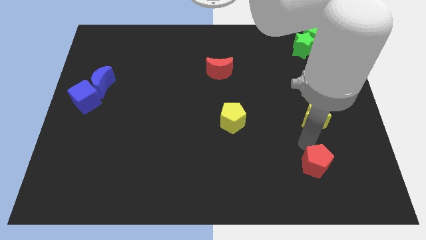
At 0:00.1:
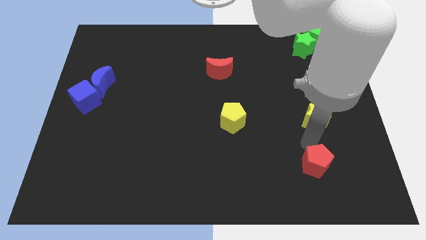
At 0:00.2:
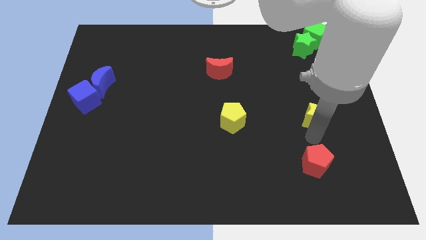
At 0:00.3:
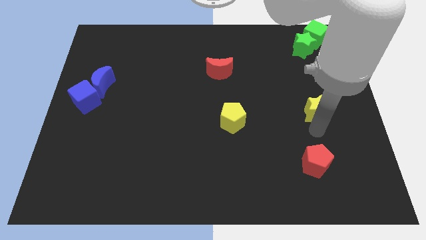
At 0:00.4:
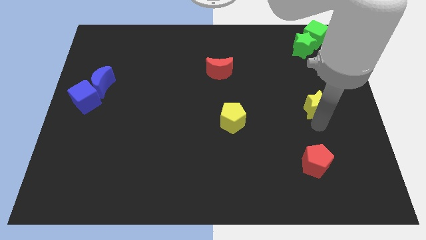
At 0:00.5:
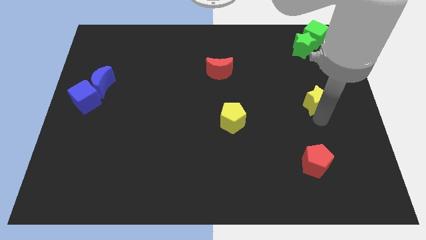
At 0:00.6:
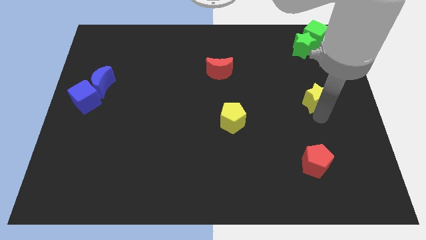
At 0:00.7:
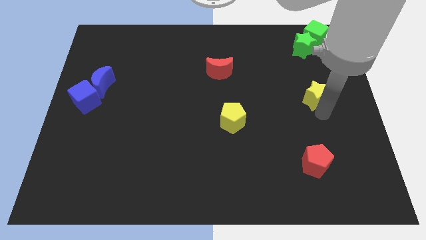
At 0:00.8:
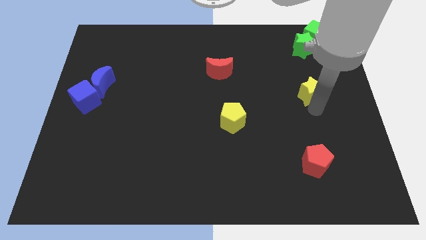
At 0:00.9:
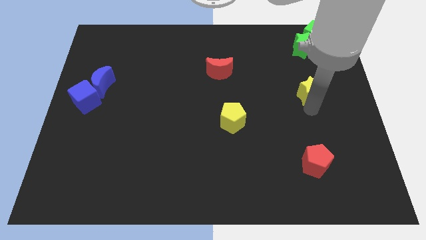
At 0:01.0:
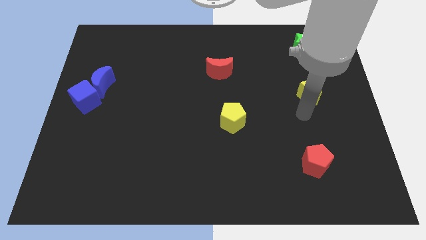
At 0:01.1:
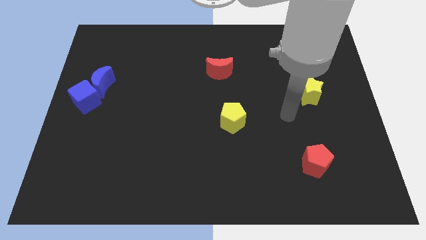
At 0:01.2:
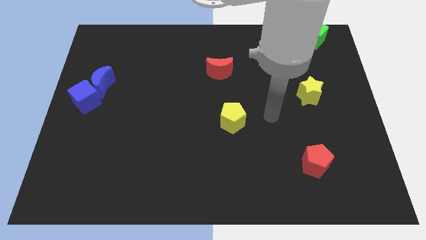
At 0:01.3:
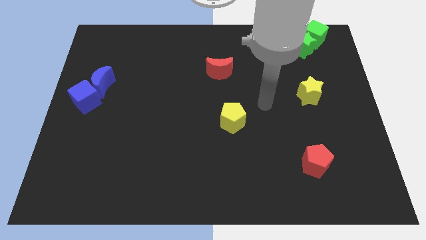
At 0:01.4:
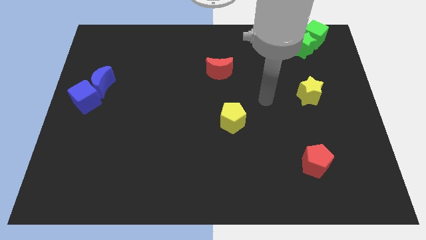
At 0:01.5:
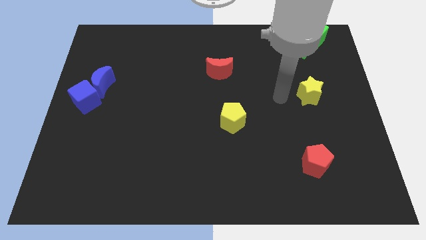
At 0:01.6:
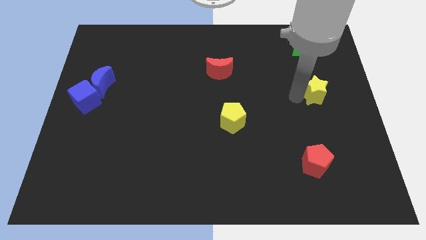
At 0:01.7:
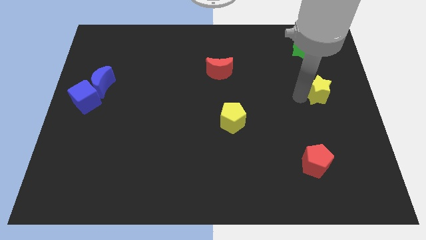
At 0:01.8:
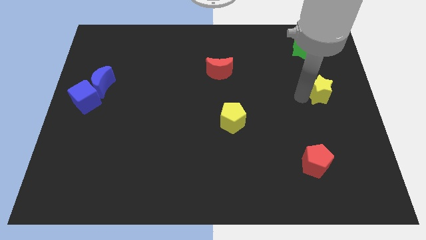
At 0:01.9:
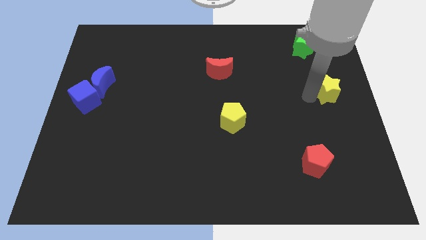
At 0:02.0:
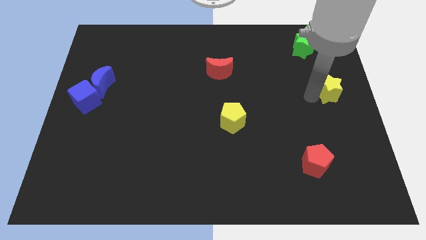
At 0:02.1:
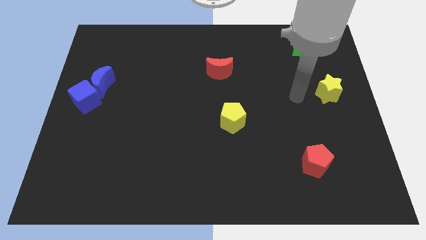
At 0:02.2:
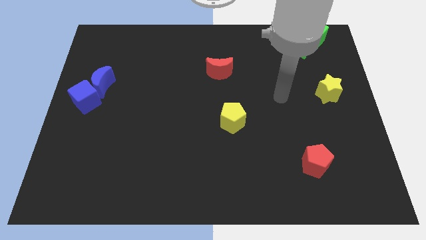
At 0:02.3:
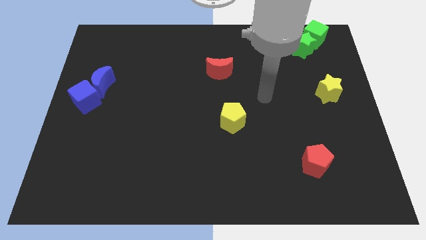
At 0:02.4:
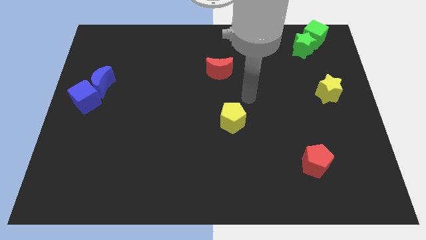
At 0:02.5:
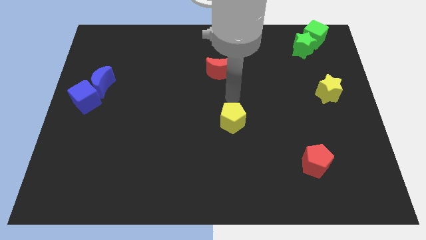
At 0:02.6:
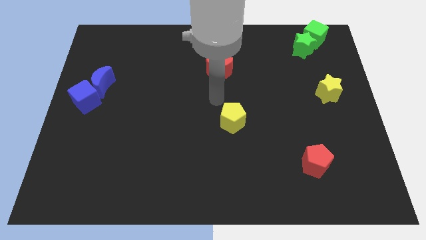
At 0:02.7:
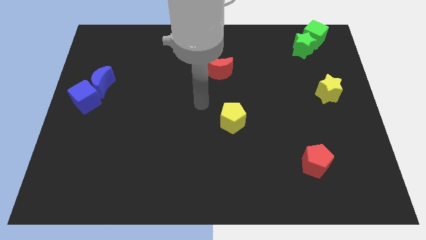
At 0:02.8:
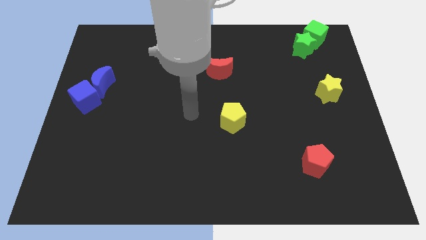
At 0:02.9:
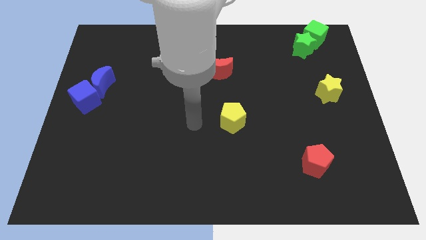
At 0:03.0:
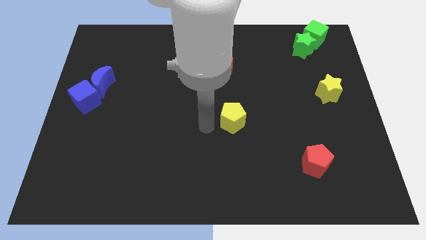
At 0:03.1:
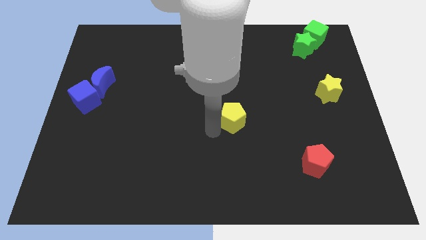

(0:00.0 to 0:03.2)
move the yellow star to the centre right on the board

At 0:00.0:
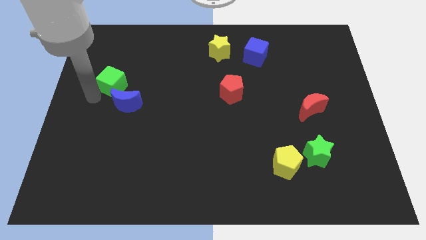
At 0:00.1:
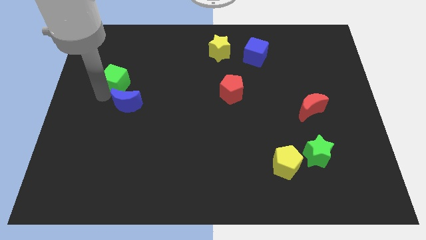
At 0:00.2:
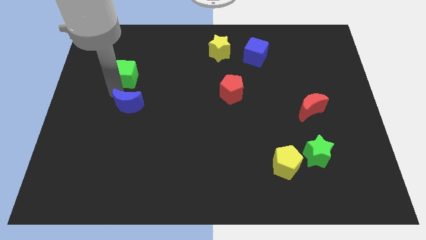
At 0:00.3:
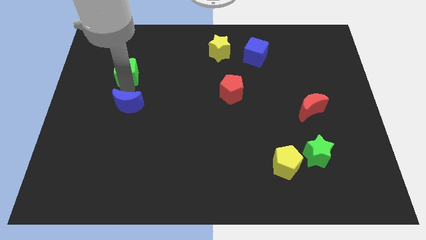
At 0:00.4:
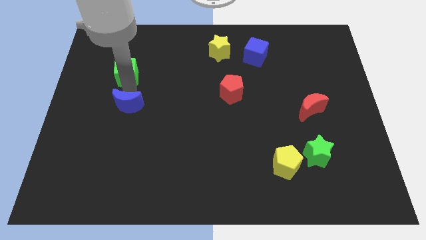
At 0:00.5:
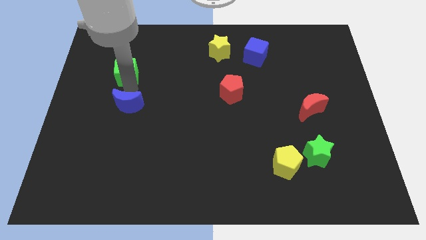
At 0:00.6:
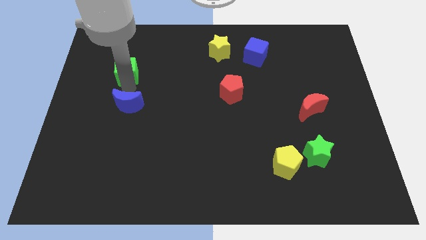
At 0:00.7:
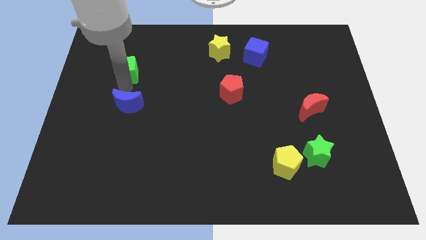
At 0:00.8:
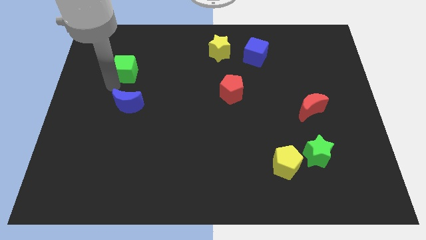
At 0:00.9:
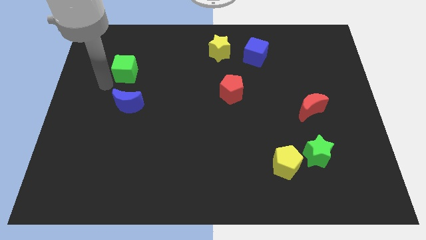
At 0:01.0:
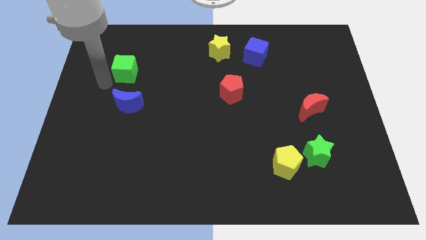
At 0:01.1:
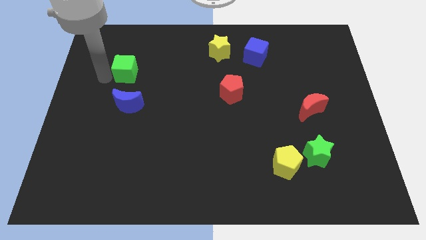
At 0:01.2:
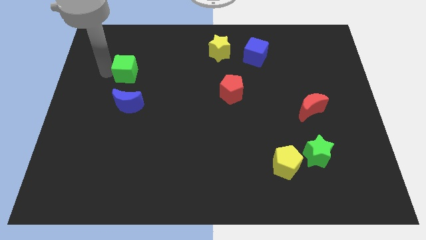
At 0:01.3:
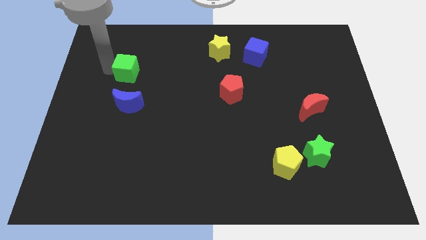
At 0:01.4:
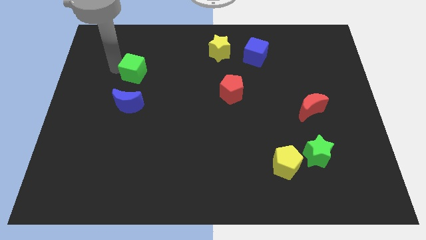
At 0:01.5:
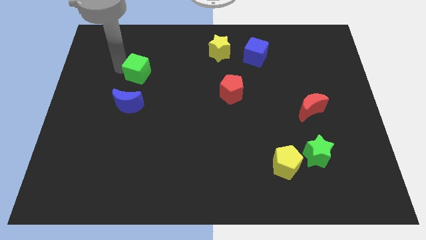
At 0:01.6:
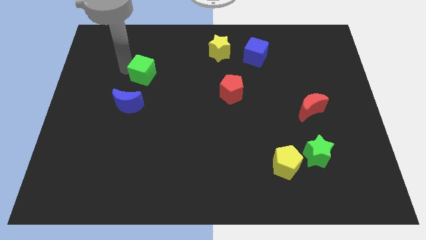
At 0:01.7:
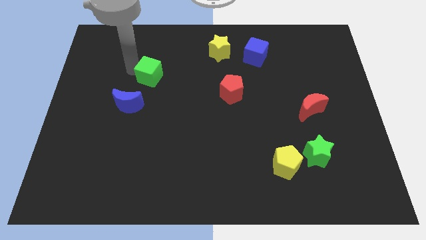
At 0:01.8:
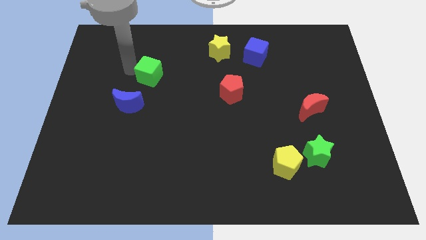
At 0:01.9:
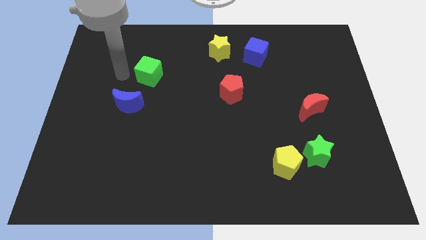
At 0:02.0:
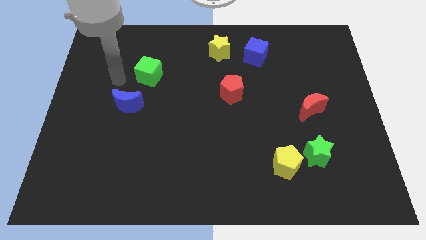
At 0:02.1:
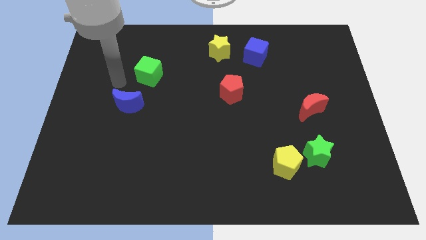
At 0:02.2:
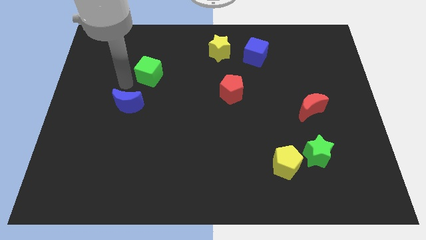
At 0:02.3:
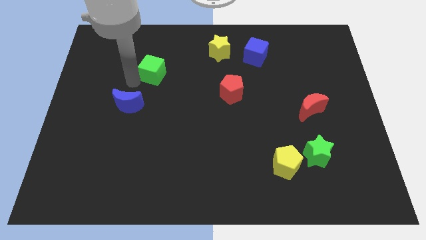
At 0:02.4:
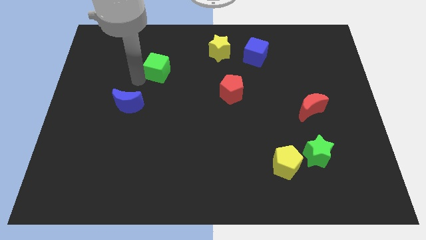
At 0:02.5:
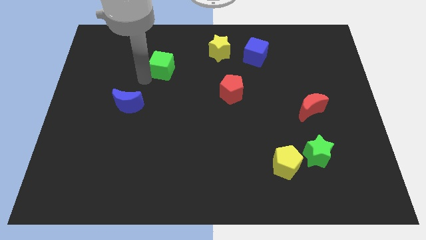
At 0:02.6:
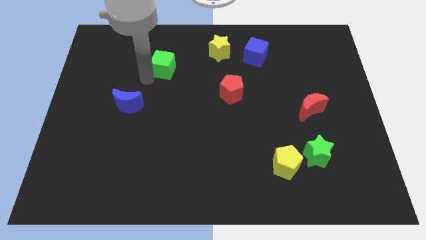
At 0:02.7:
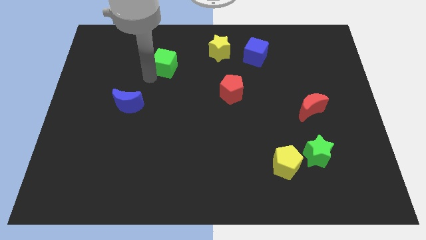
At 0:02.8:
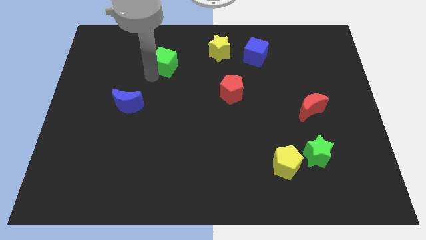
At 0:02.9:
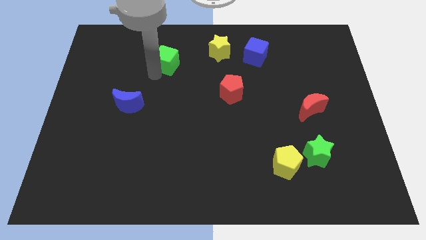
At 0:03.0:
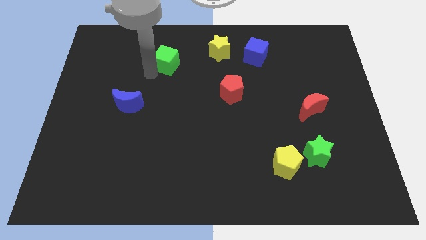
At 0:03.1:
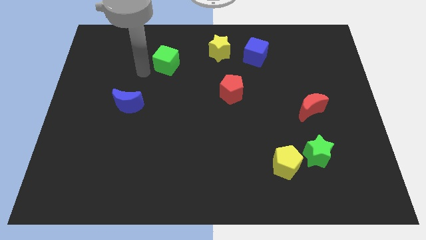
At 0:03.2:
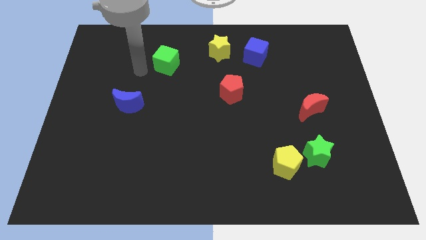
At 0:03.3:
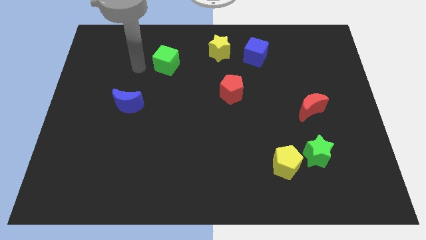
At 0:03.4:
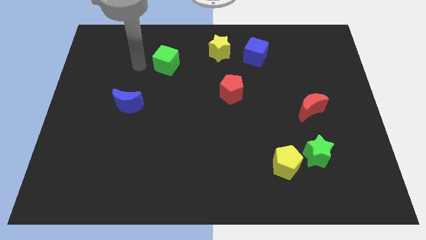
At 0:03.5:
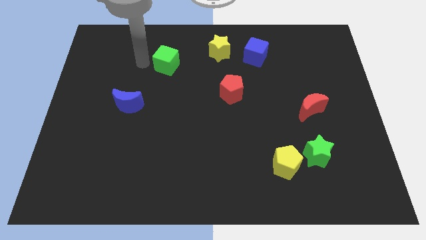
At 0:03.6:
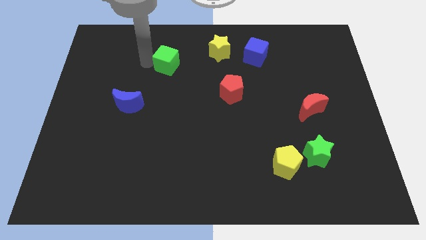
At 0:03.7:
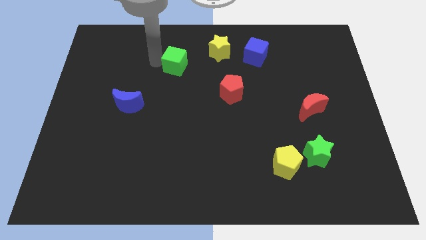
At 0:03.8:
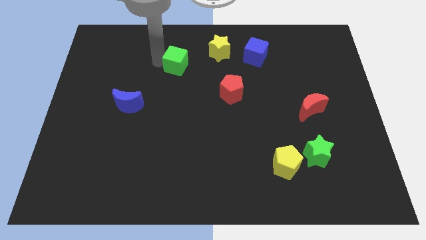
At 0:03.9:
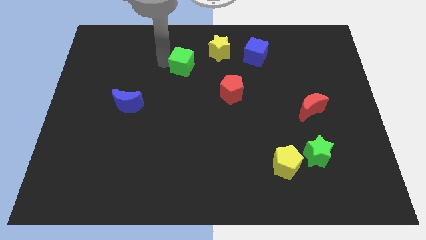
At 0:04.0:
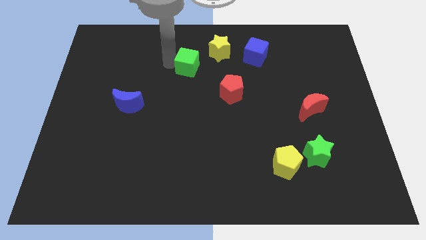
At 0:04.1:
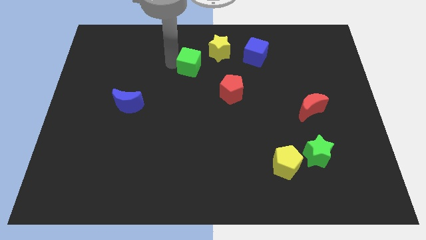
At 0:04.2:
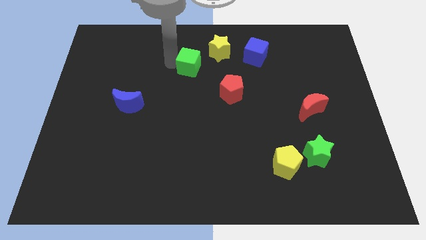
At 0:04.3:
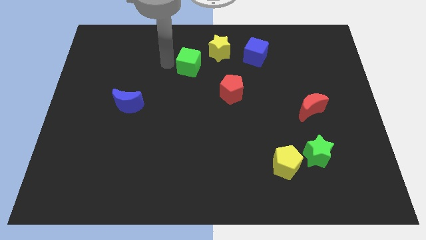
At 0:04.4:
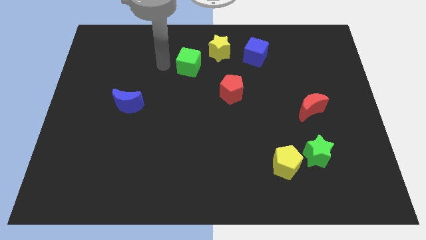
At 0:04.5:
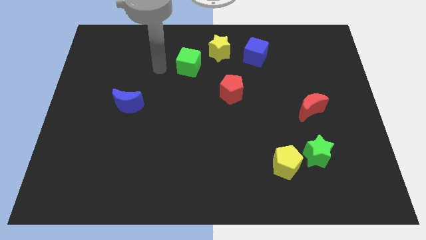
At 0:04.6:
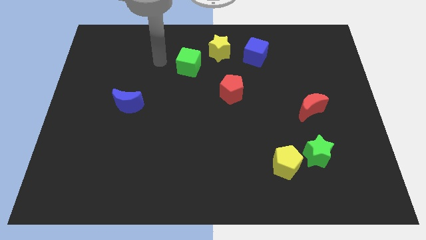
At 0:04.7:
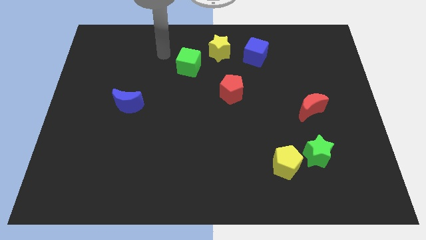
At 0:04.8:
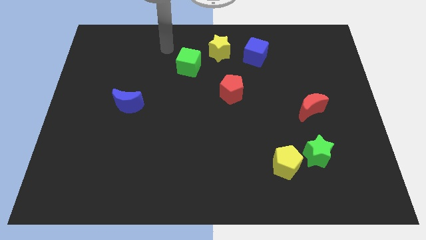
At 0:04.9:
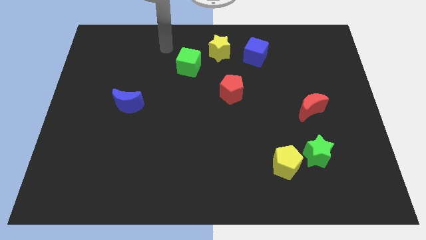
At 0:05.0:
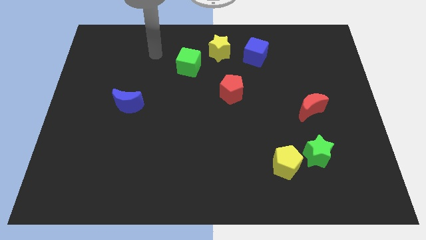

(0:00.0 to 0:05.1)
push green cube diagonal to yellow star

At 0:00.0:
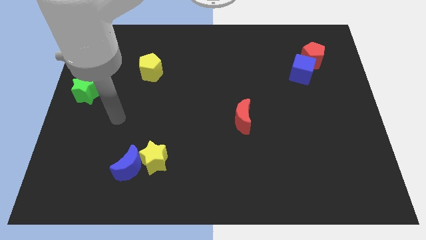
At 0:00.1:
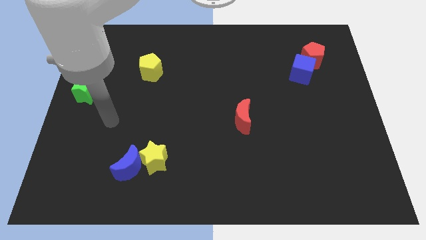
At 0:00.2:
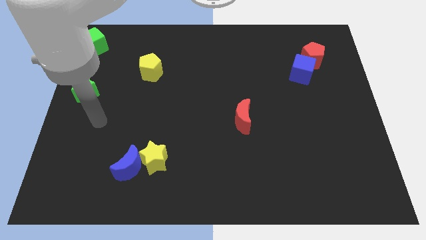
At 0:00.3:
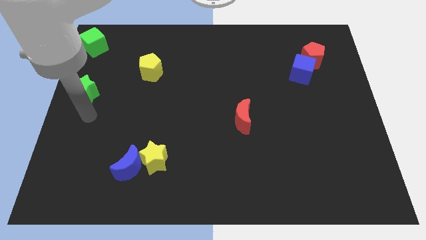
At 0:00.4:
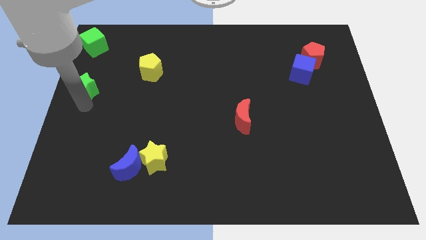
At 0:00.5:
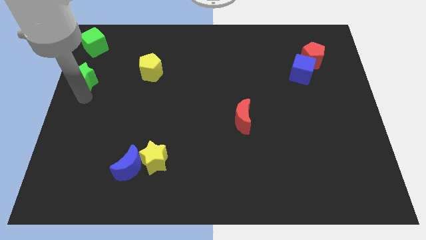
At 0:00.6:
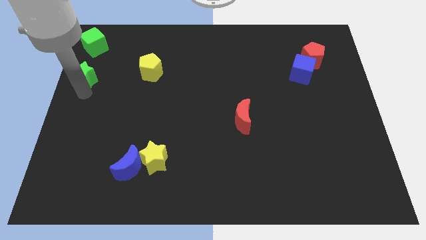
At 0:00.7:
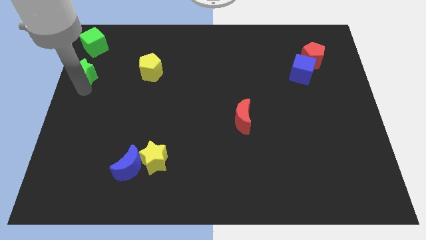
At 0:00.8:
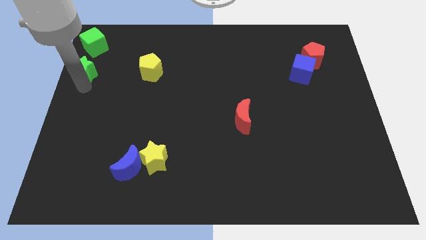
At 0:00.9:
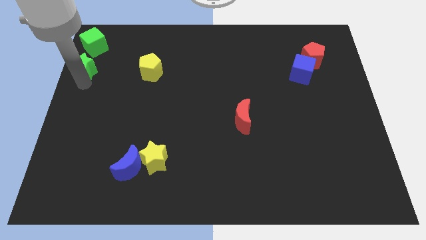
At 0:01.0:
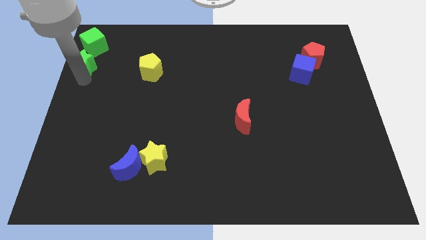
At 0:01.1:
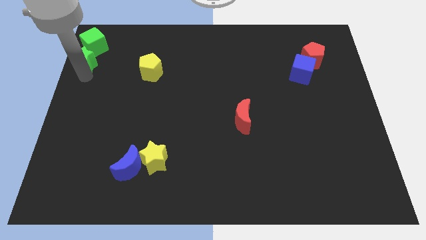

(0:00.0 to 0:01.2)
push the green star close to the green cube
